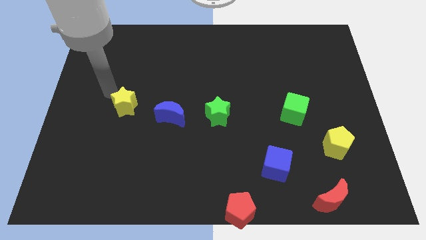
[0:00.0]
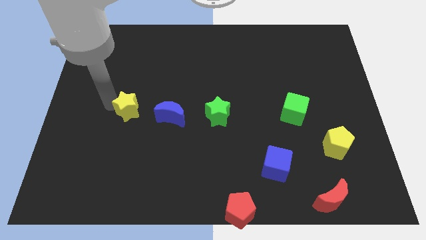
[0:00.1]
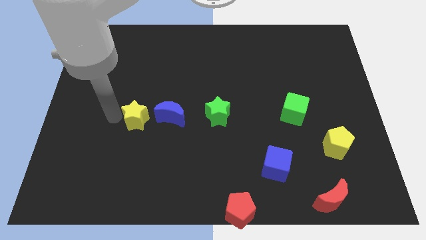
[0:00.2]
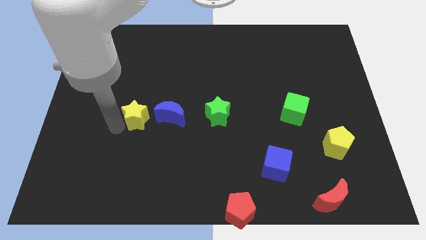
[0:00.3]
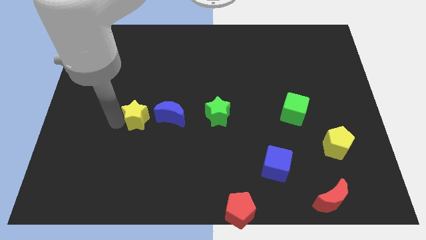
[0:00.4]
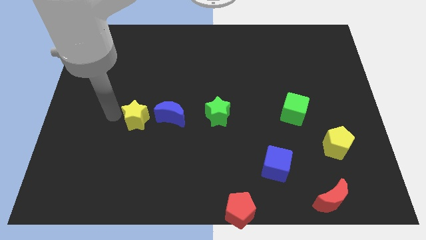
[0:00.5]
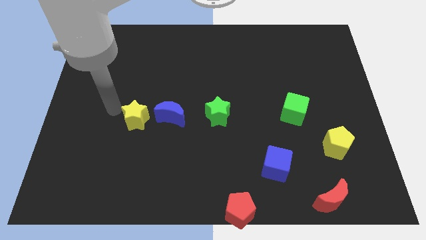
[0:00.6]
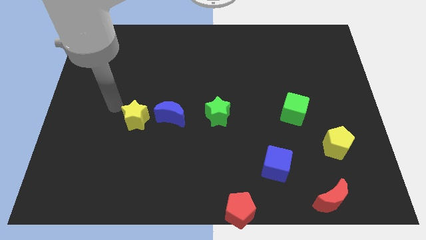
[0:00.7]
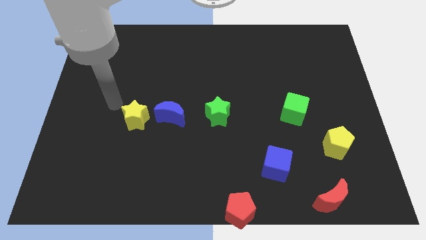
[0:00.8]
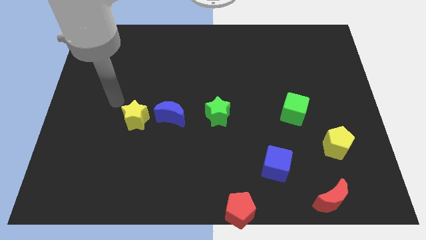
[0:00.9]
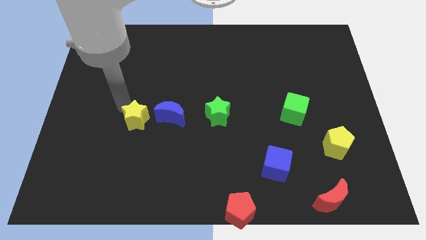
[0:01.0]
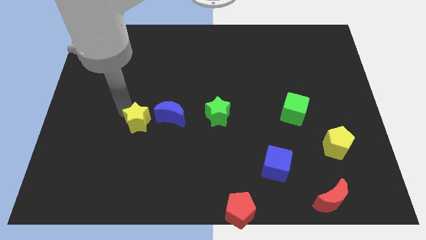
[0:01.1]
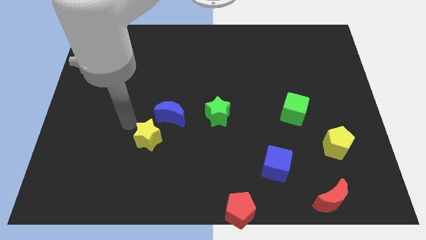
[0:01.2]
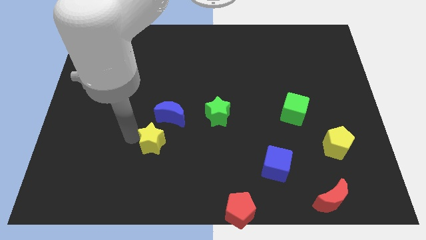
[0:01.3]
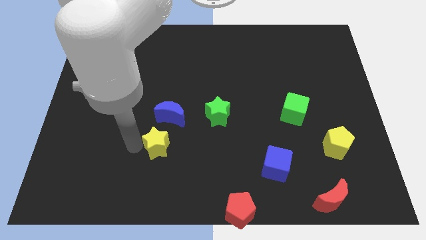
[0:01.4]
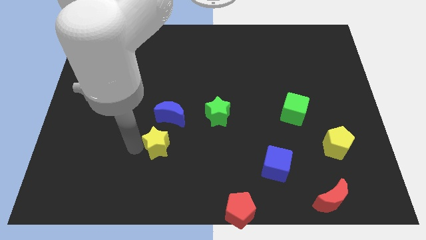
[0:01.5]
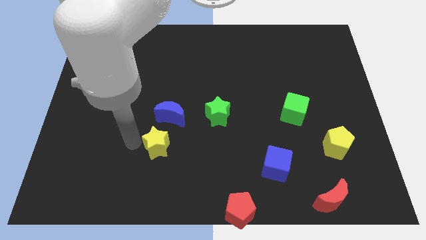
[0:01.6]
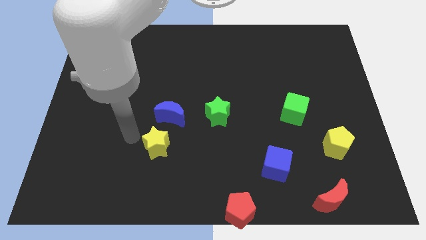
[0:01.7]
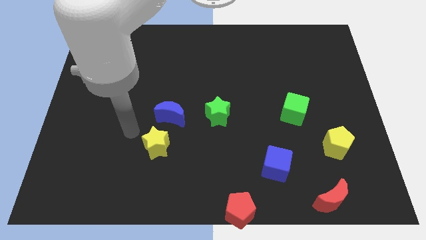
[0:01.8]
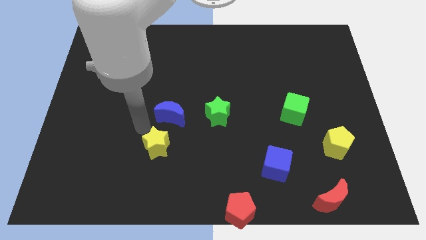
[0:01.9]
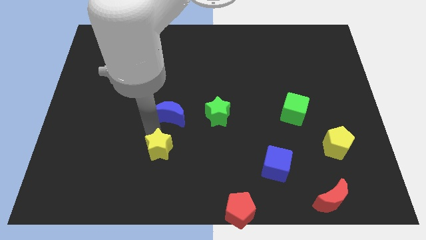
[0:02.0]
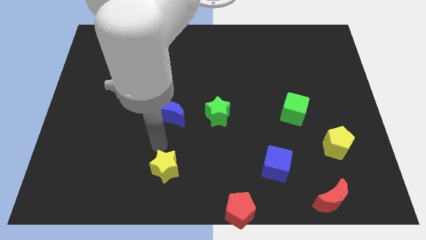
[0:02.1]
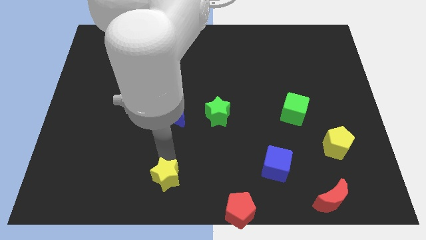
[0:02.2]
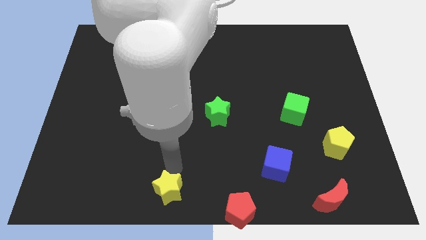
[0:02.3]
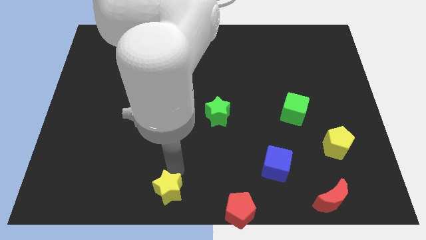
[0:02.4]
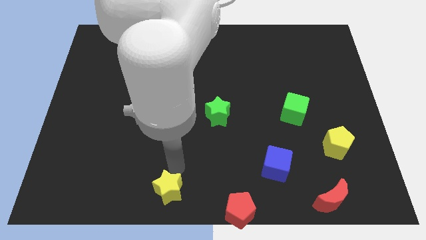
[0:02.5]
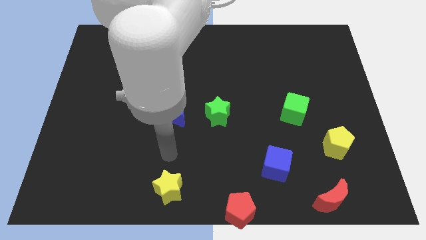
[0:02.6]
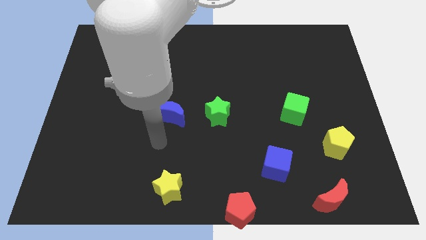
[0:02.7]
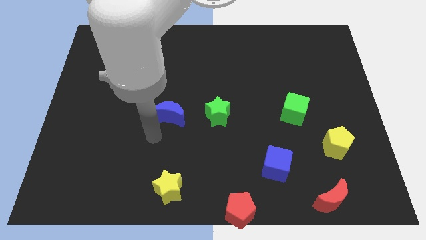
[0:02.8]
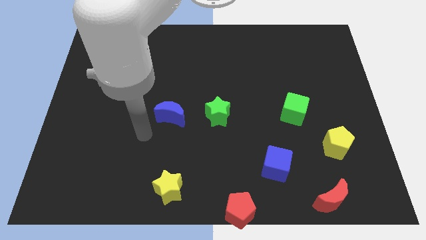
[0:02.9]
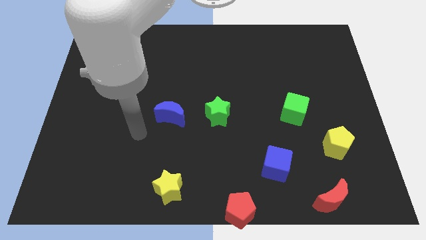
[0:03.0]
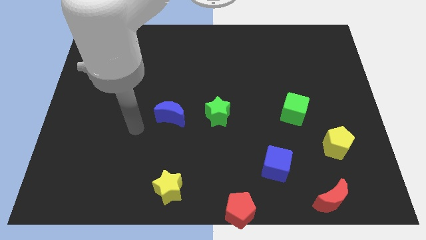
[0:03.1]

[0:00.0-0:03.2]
move the yellow star at the bottom of the blue moon

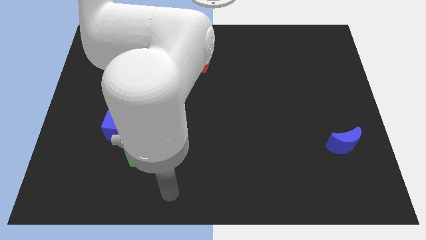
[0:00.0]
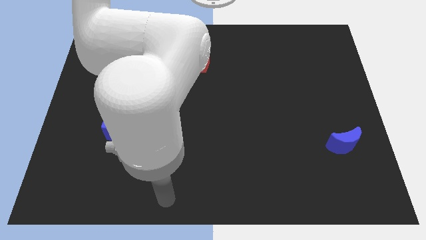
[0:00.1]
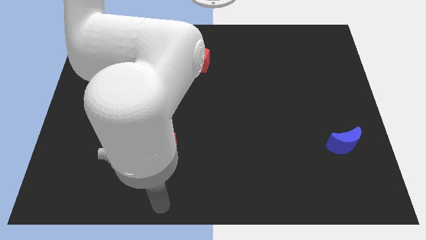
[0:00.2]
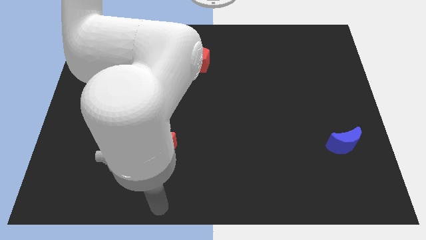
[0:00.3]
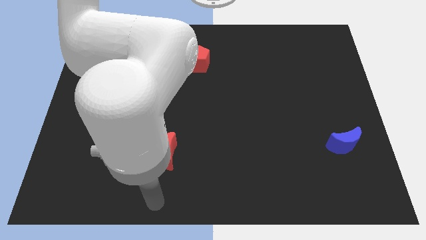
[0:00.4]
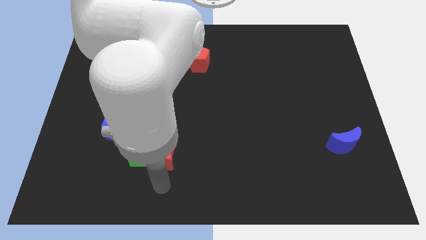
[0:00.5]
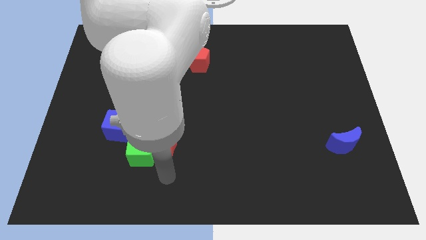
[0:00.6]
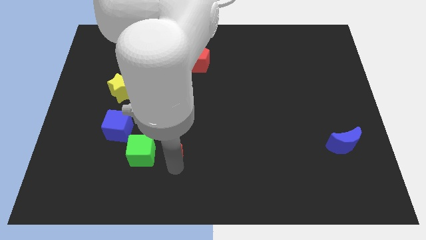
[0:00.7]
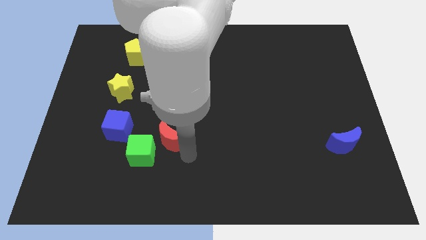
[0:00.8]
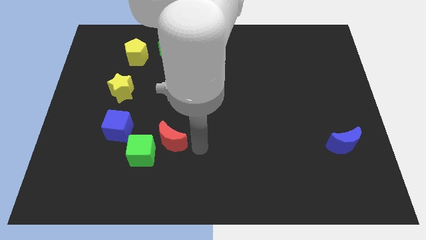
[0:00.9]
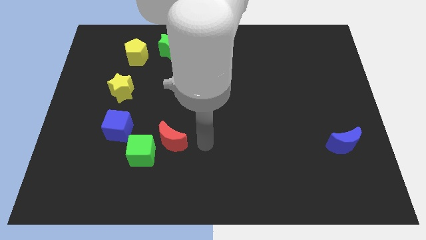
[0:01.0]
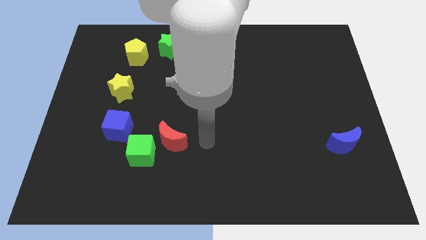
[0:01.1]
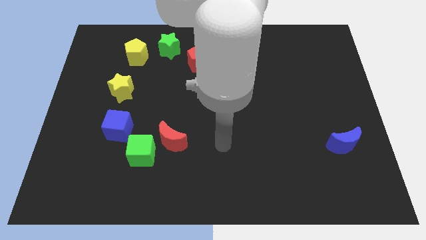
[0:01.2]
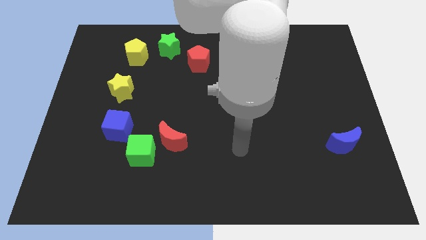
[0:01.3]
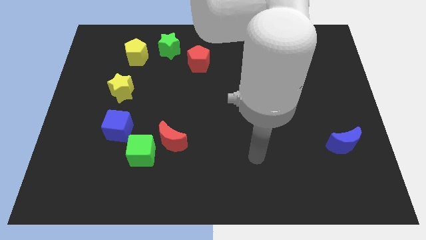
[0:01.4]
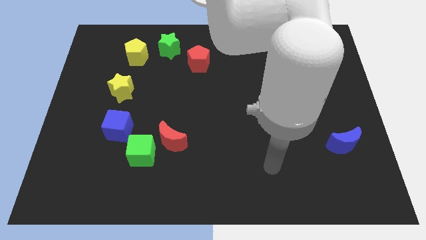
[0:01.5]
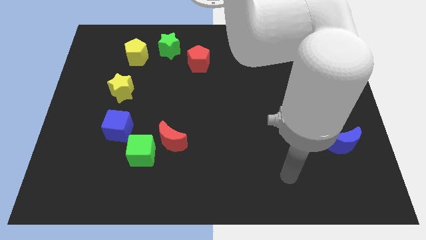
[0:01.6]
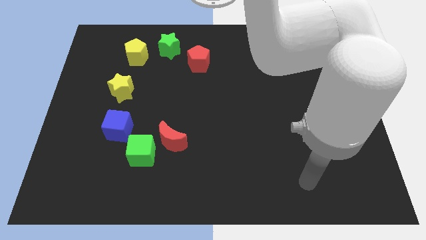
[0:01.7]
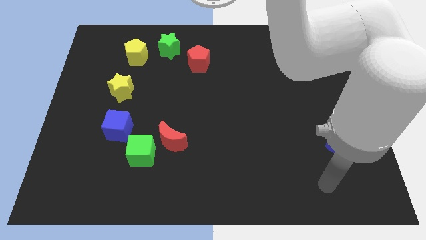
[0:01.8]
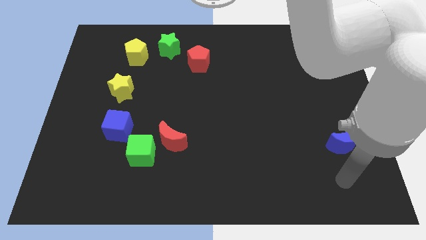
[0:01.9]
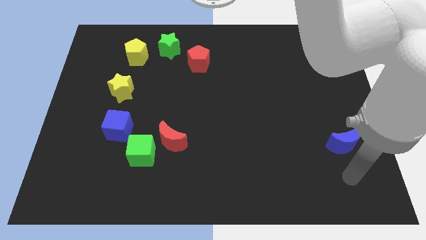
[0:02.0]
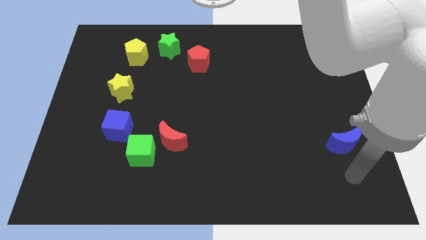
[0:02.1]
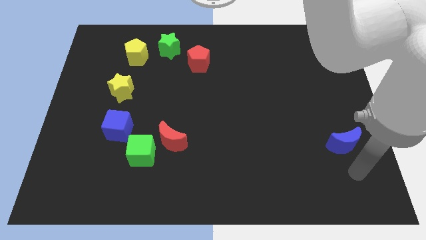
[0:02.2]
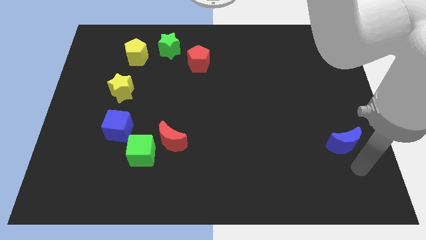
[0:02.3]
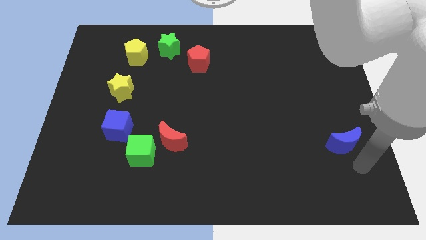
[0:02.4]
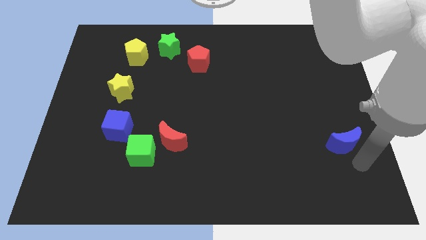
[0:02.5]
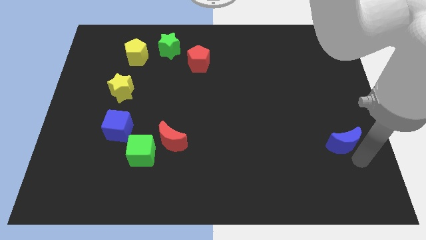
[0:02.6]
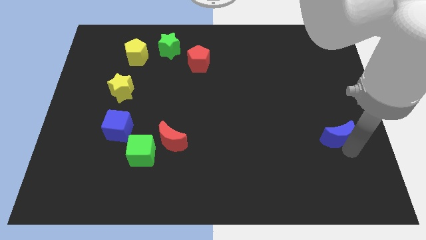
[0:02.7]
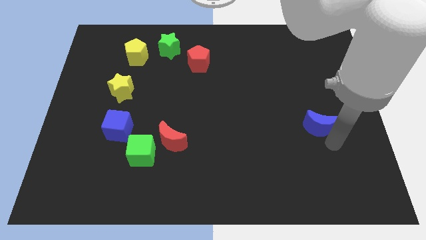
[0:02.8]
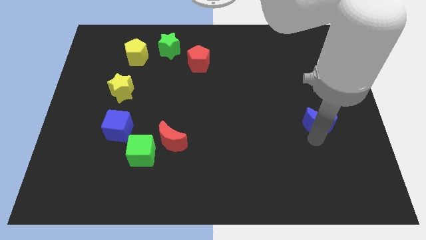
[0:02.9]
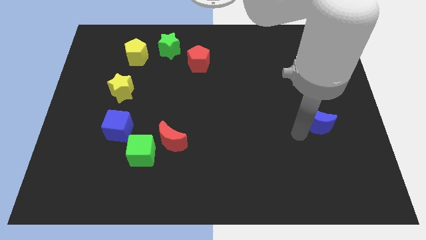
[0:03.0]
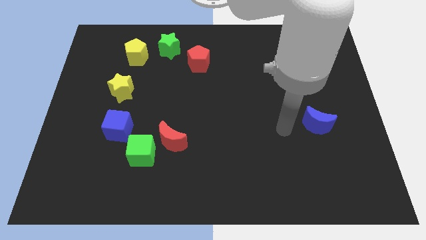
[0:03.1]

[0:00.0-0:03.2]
push the blue moonslightly upwards

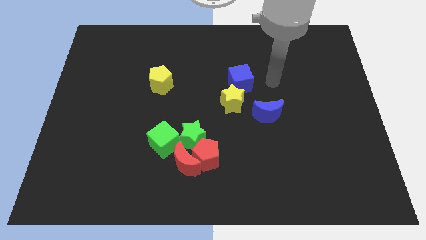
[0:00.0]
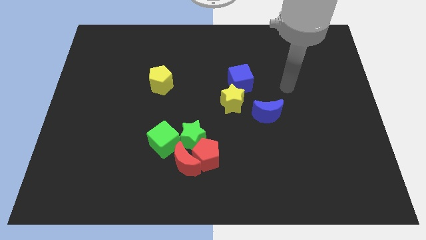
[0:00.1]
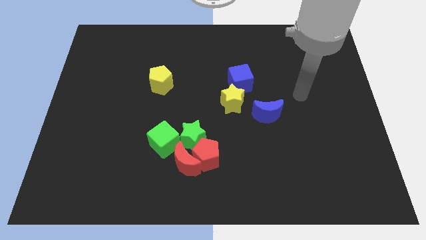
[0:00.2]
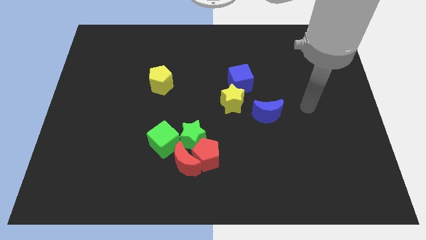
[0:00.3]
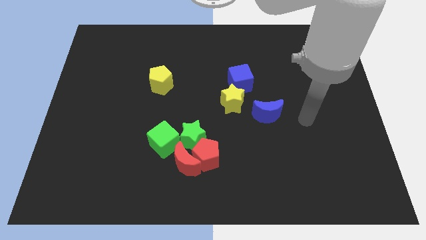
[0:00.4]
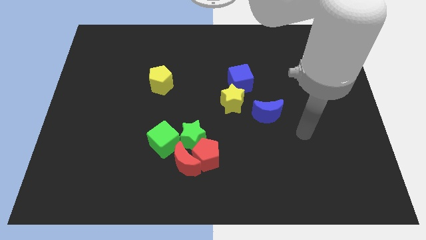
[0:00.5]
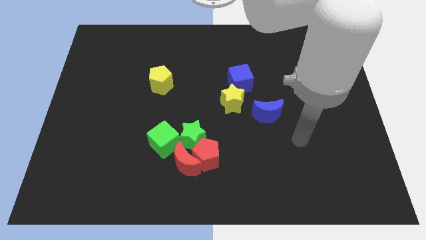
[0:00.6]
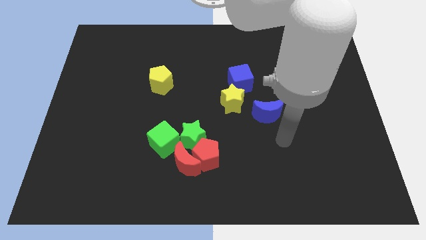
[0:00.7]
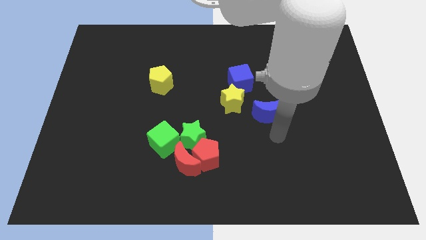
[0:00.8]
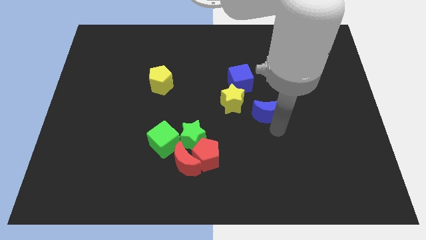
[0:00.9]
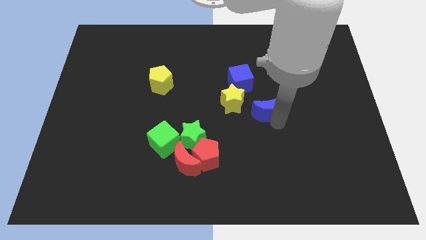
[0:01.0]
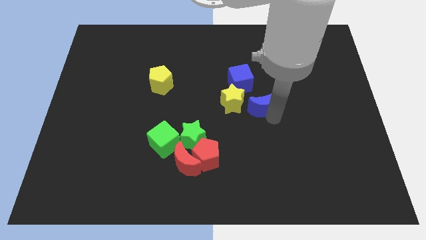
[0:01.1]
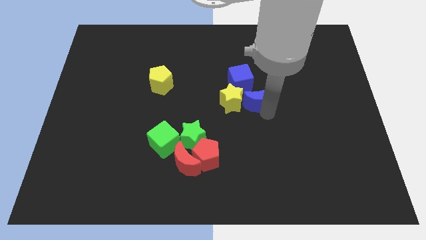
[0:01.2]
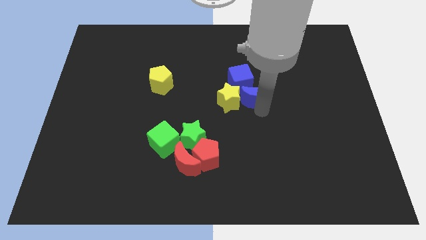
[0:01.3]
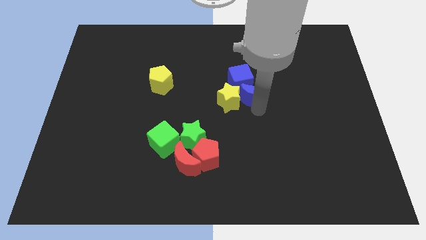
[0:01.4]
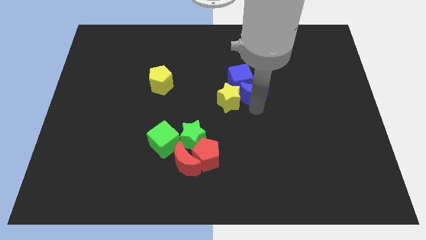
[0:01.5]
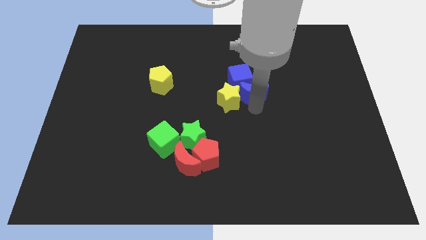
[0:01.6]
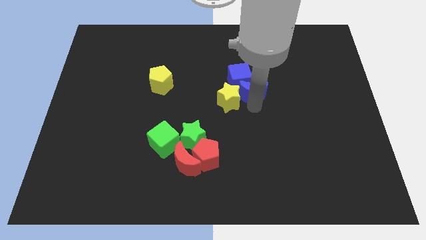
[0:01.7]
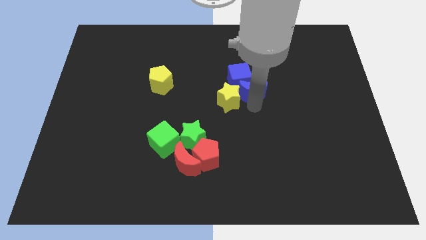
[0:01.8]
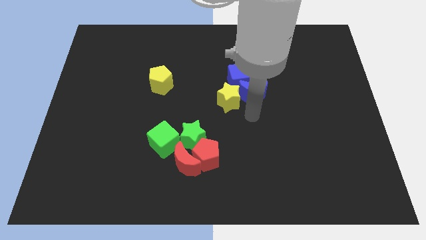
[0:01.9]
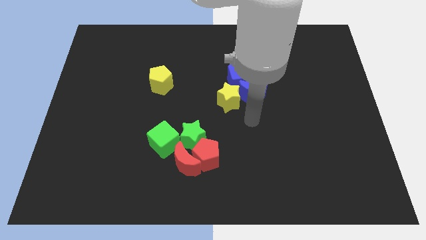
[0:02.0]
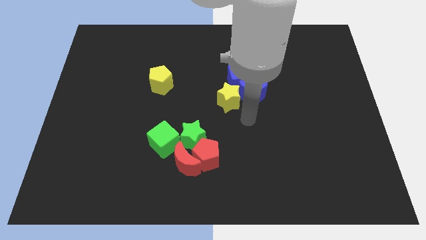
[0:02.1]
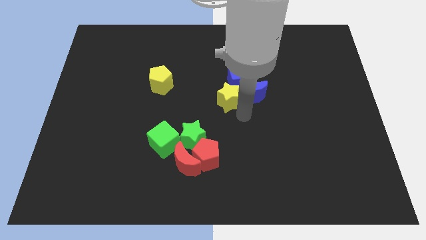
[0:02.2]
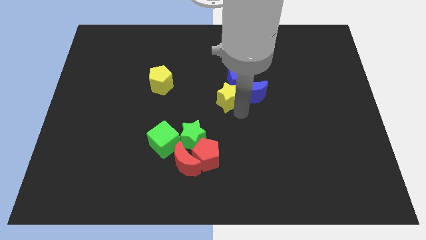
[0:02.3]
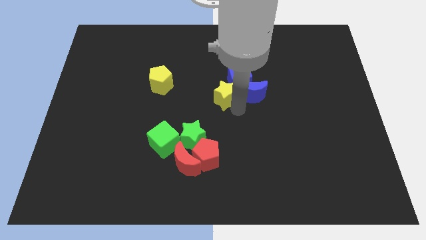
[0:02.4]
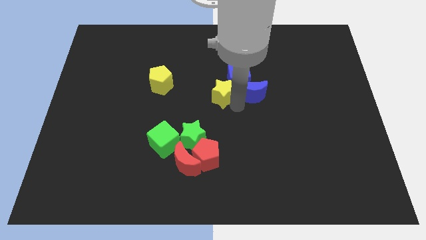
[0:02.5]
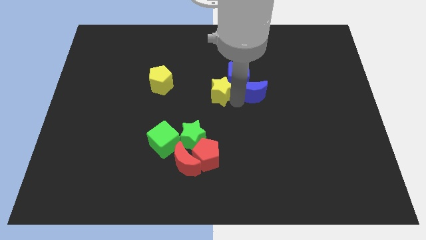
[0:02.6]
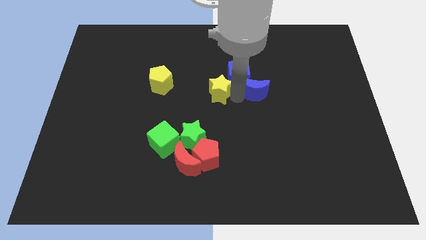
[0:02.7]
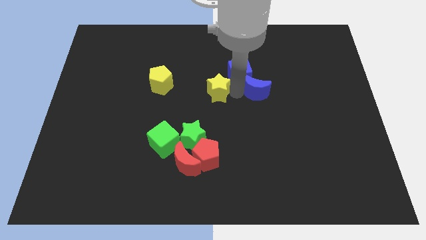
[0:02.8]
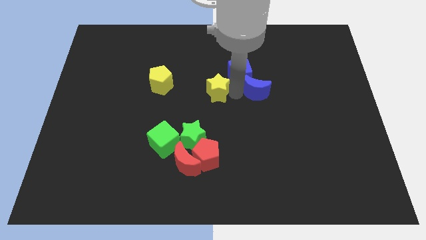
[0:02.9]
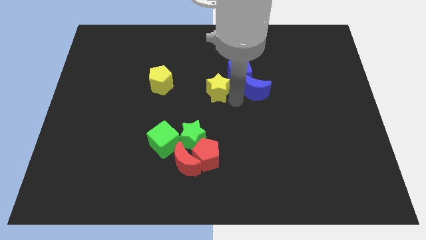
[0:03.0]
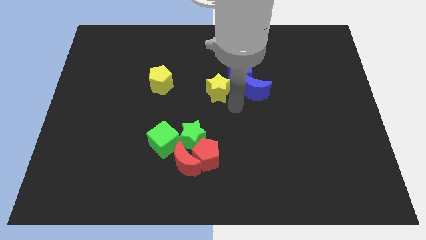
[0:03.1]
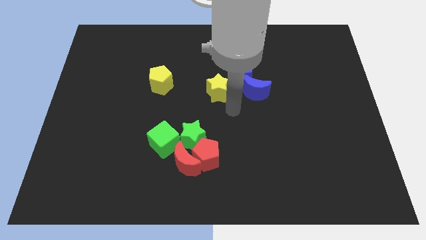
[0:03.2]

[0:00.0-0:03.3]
move your arm away from the blue cube
